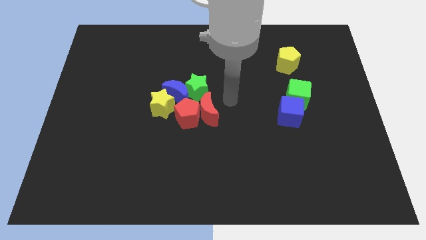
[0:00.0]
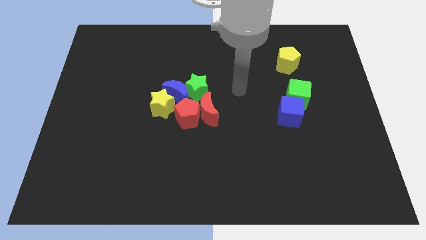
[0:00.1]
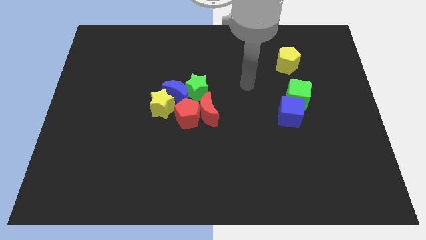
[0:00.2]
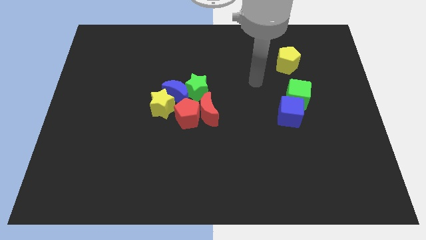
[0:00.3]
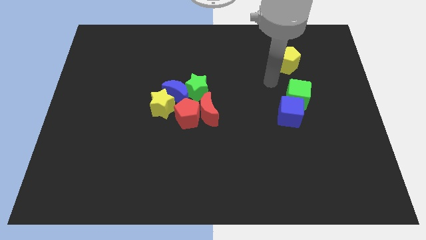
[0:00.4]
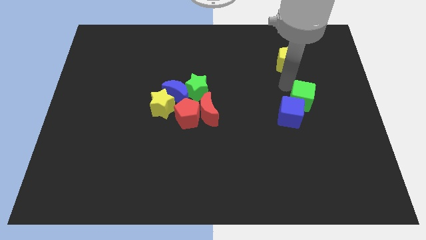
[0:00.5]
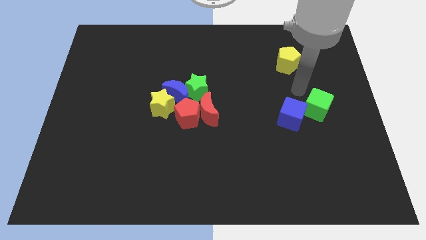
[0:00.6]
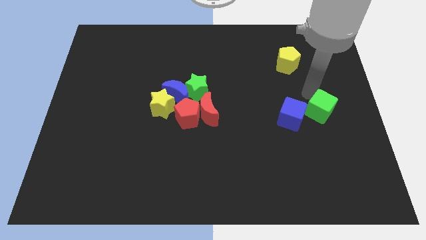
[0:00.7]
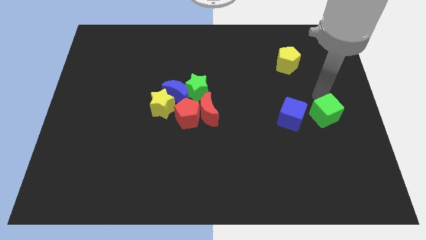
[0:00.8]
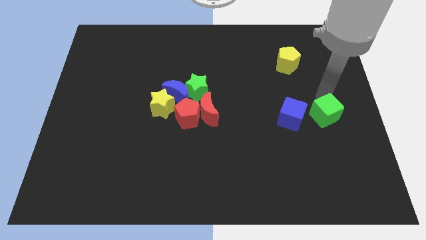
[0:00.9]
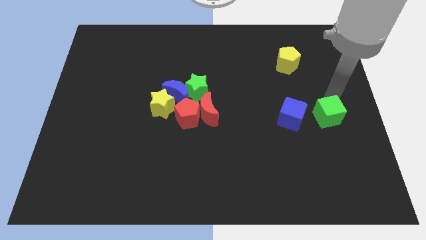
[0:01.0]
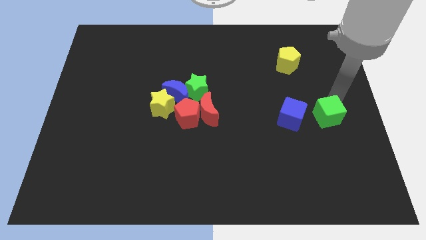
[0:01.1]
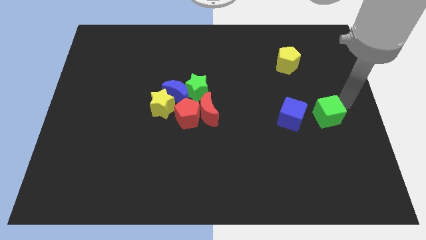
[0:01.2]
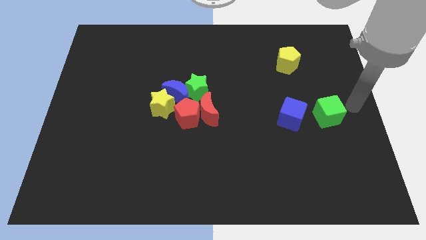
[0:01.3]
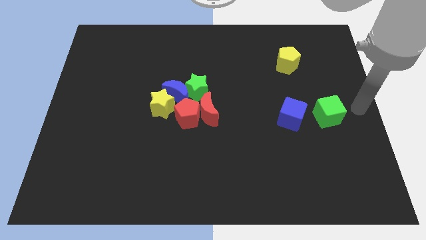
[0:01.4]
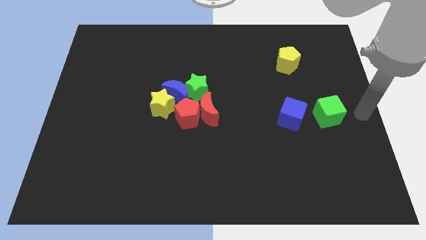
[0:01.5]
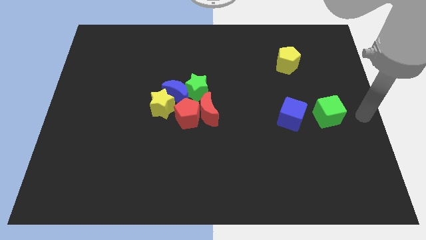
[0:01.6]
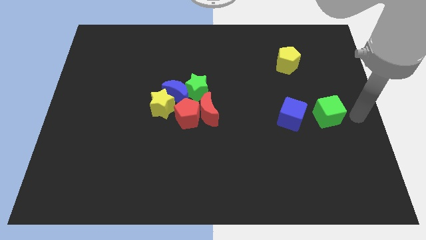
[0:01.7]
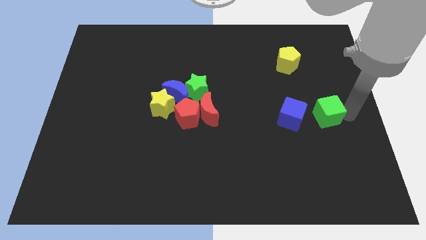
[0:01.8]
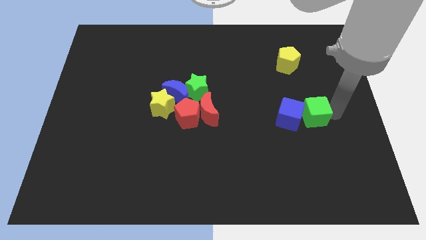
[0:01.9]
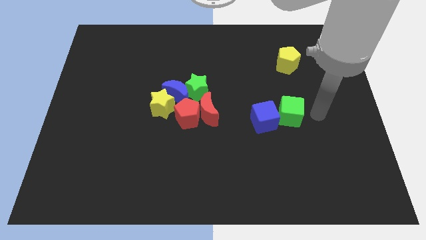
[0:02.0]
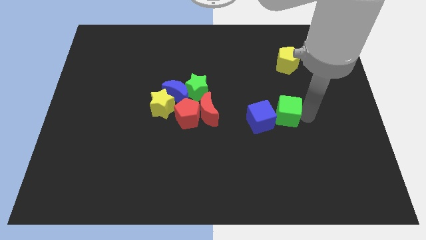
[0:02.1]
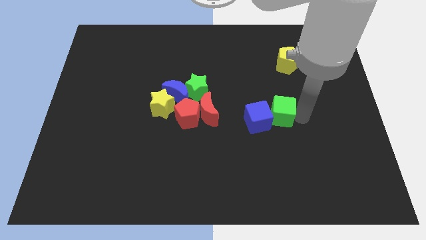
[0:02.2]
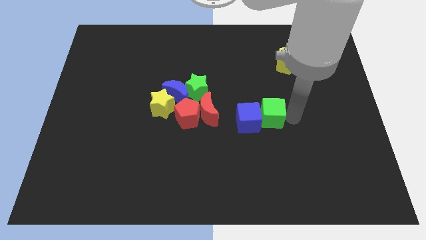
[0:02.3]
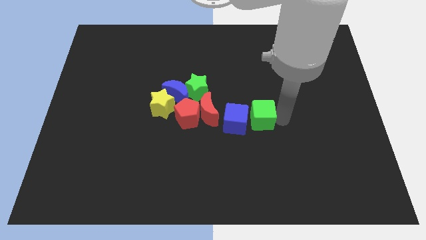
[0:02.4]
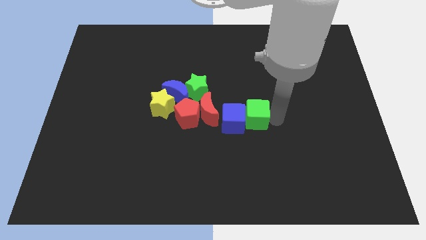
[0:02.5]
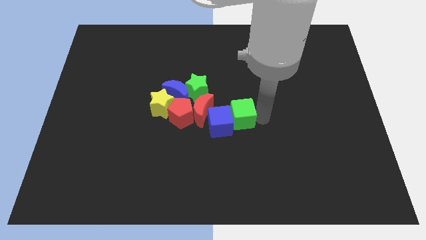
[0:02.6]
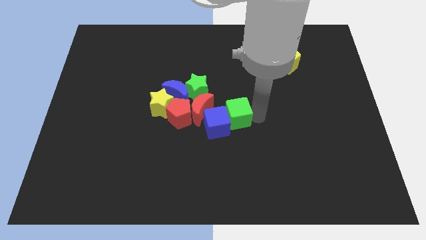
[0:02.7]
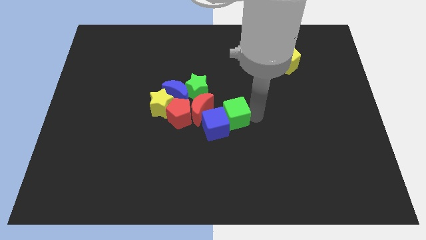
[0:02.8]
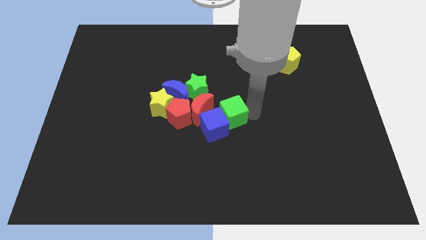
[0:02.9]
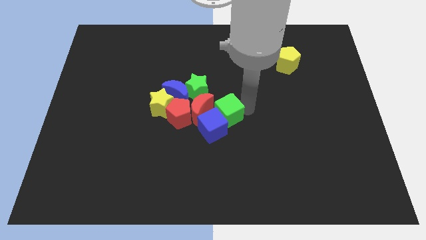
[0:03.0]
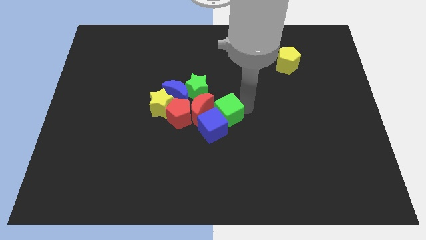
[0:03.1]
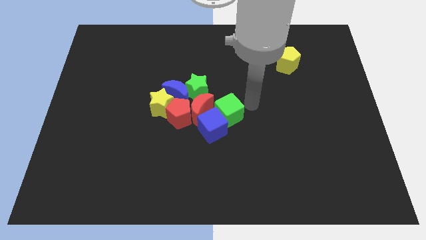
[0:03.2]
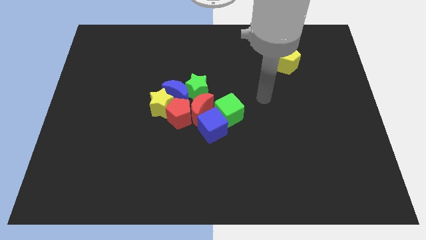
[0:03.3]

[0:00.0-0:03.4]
push the green cube towards the red crescent

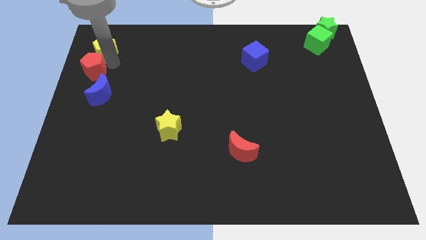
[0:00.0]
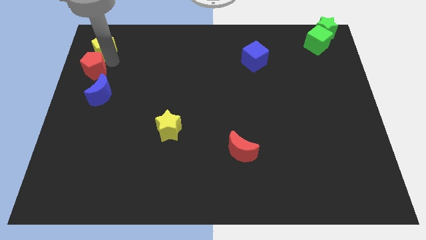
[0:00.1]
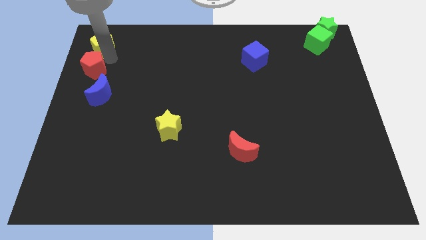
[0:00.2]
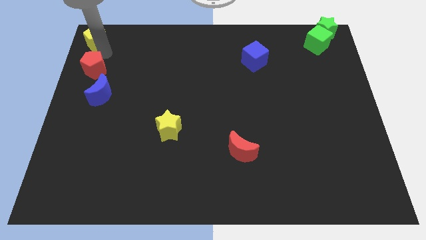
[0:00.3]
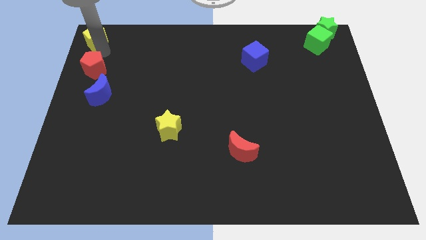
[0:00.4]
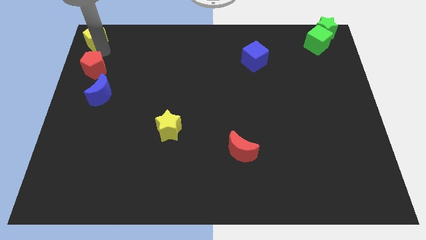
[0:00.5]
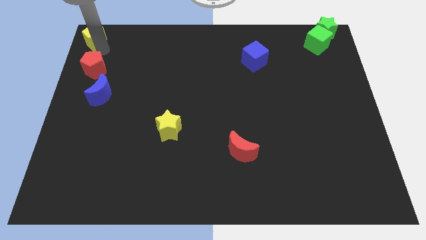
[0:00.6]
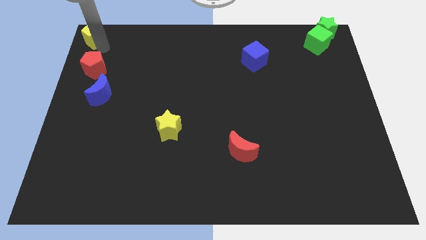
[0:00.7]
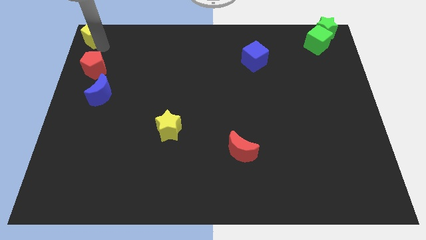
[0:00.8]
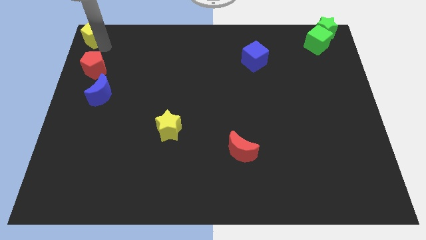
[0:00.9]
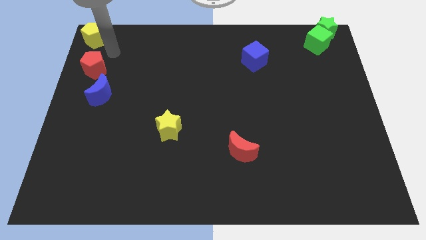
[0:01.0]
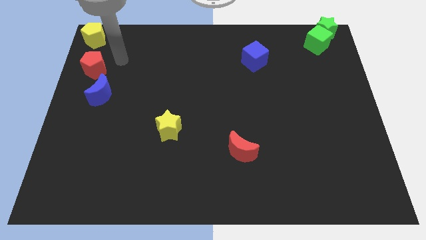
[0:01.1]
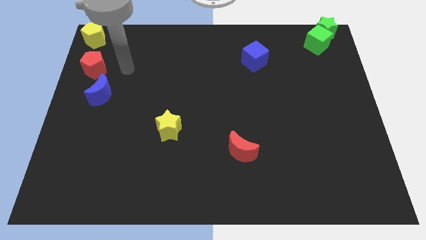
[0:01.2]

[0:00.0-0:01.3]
move the yellow pentagon to the top left corner of the board

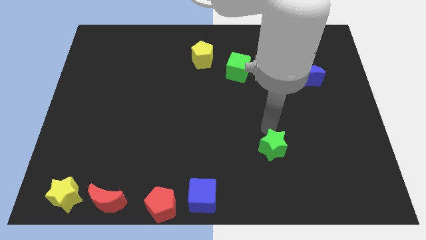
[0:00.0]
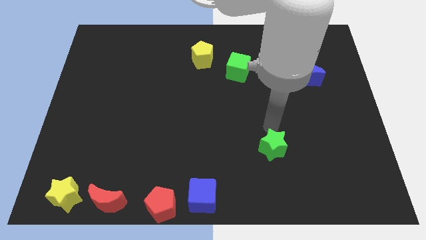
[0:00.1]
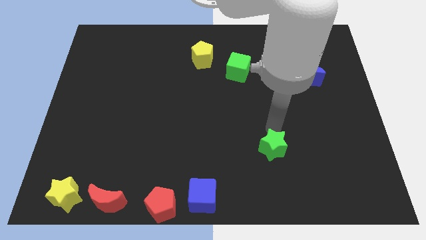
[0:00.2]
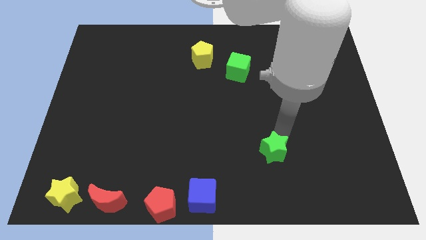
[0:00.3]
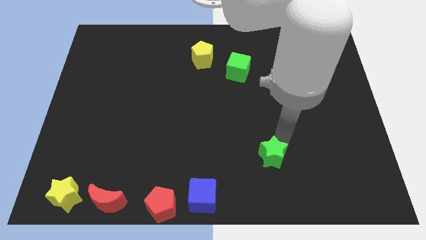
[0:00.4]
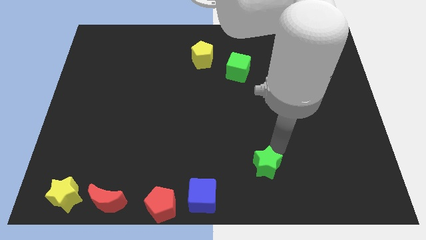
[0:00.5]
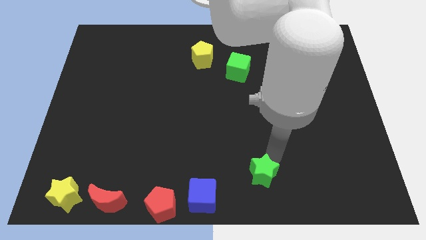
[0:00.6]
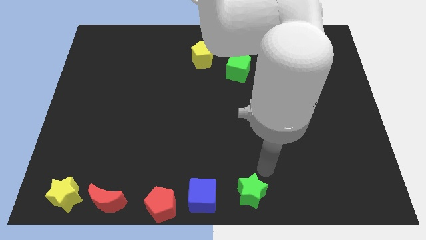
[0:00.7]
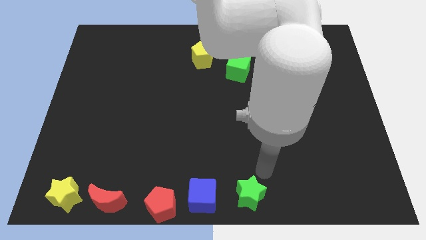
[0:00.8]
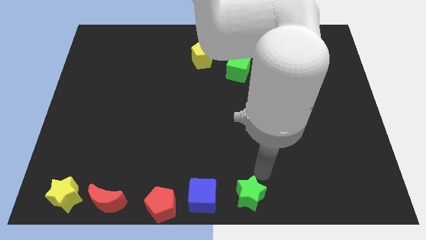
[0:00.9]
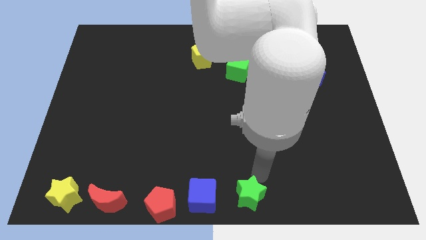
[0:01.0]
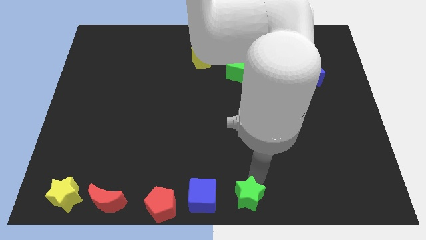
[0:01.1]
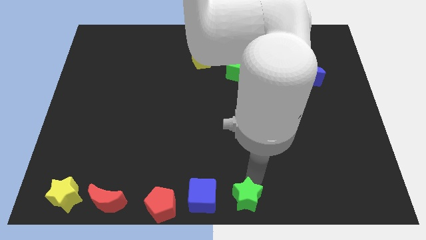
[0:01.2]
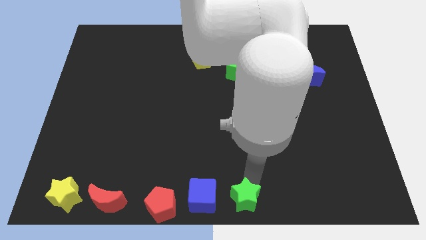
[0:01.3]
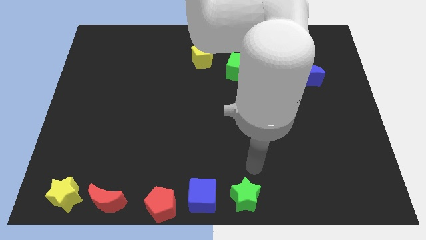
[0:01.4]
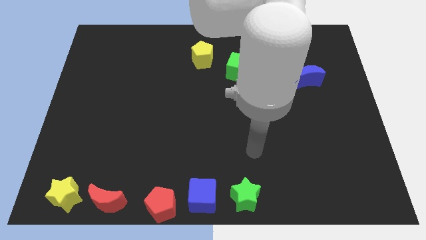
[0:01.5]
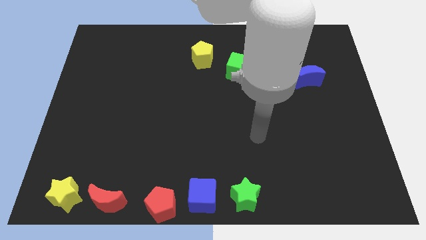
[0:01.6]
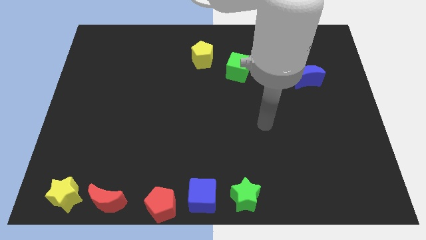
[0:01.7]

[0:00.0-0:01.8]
move the green star to the right of the blue cube

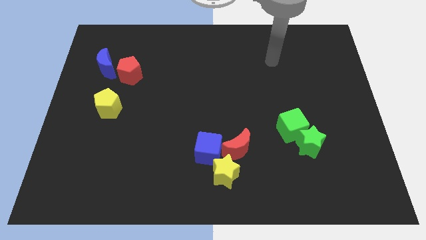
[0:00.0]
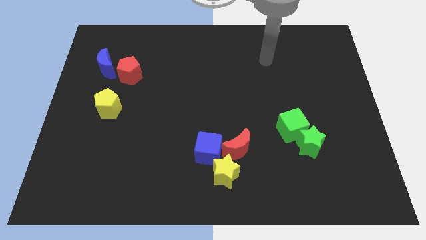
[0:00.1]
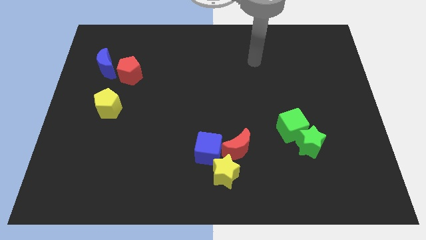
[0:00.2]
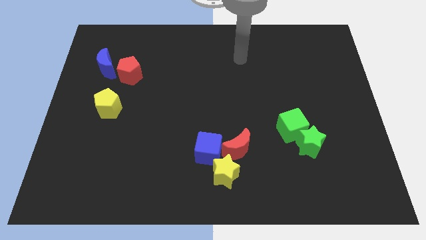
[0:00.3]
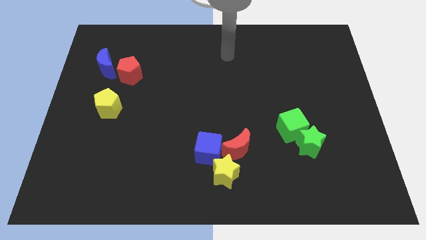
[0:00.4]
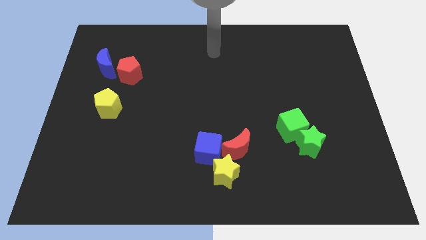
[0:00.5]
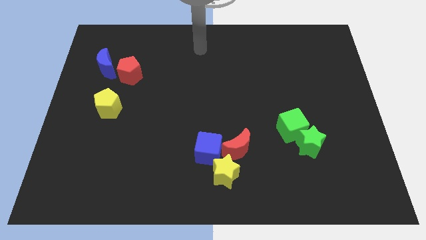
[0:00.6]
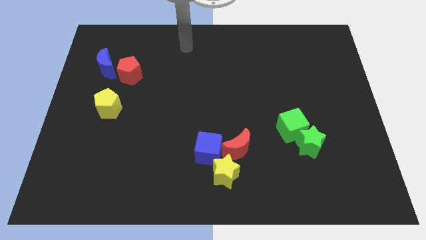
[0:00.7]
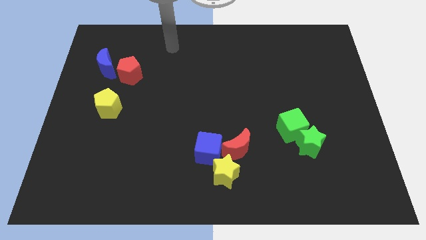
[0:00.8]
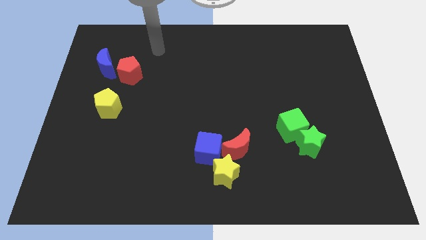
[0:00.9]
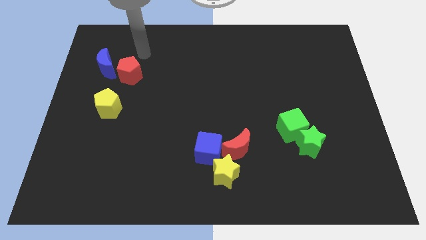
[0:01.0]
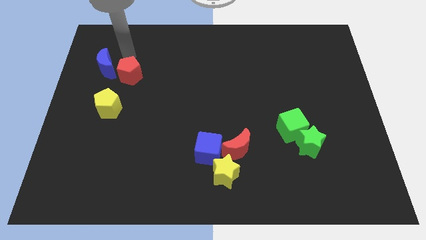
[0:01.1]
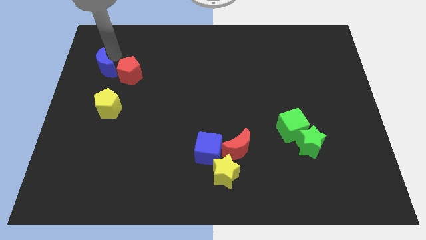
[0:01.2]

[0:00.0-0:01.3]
place your arm at the top right side of the blue moon

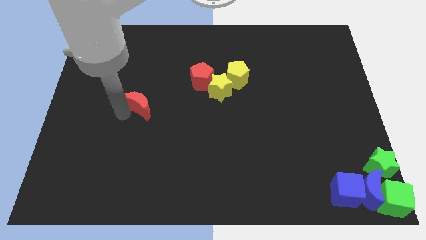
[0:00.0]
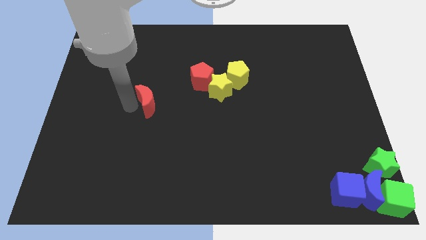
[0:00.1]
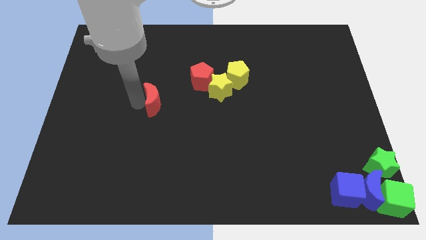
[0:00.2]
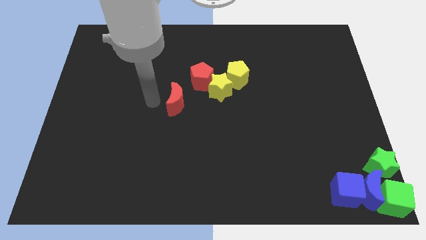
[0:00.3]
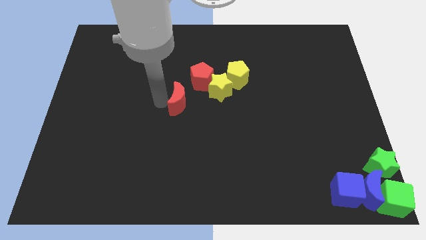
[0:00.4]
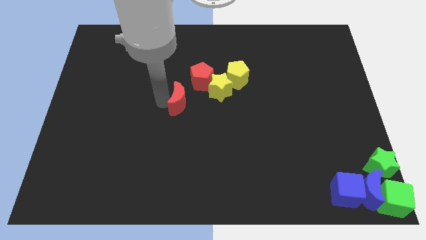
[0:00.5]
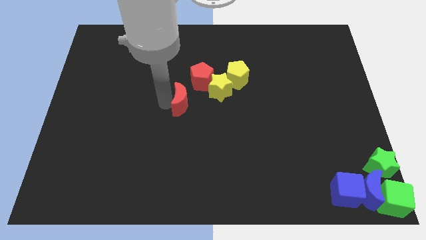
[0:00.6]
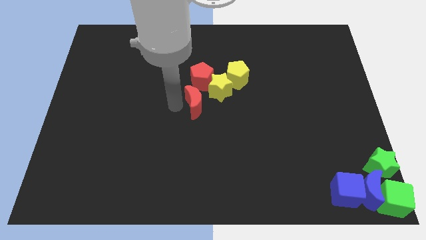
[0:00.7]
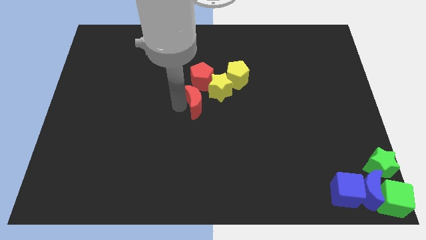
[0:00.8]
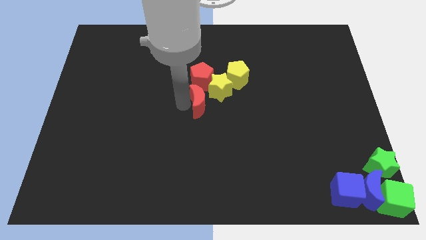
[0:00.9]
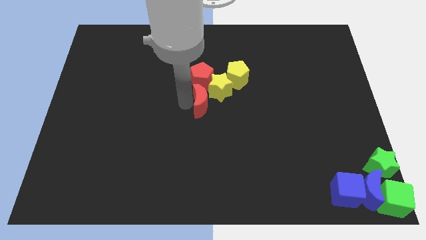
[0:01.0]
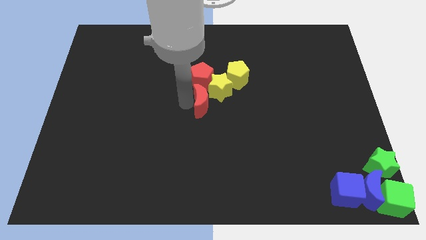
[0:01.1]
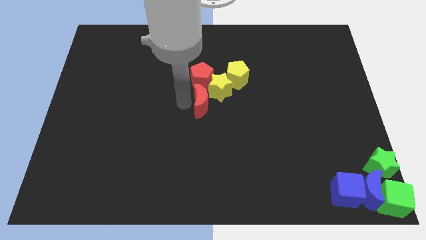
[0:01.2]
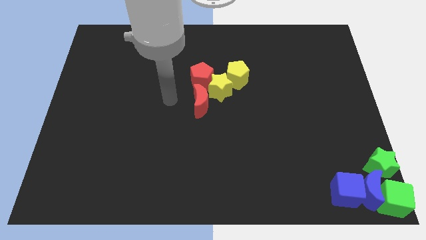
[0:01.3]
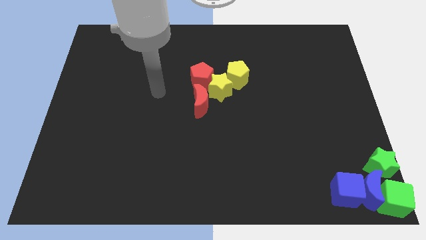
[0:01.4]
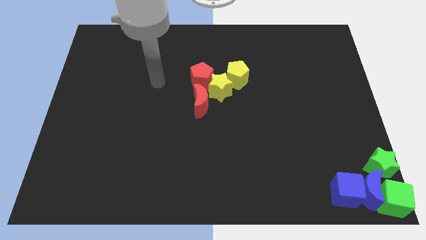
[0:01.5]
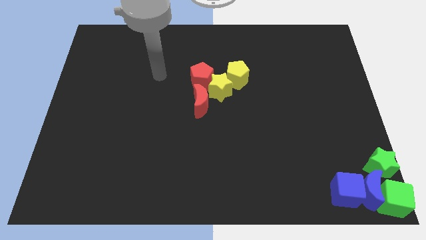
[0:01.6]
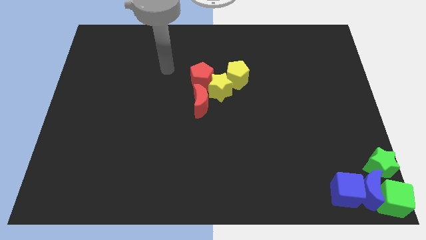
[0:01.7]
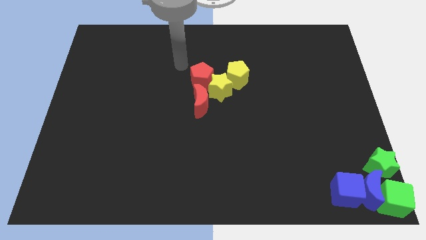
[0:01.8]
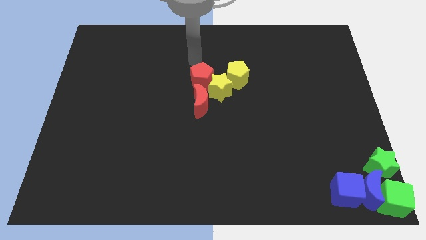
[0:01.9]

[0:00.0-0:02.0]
push the red half moon towards the yellow star
